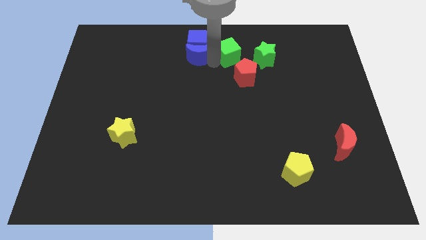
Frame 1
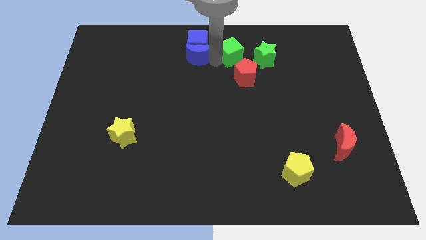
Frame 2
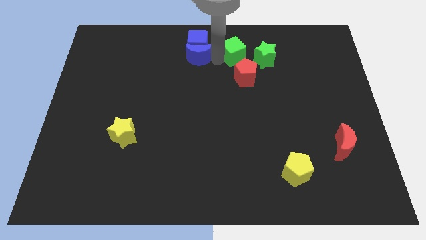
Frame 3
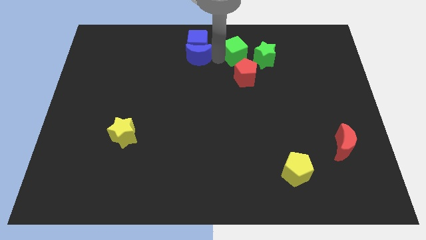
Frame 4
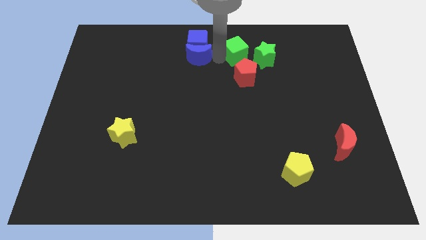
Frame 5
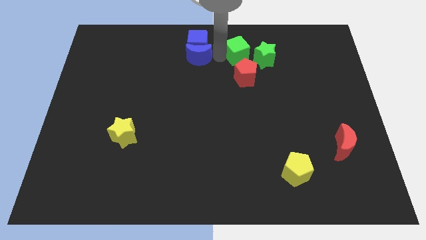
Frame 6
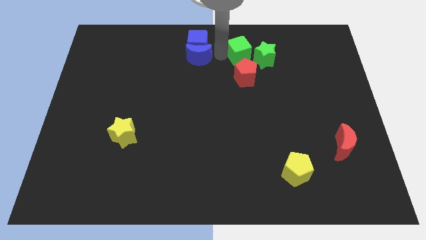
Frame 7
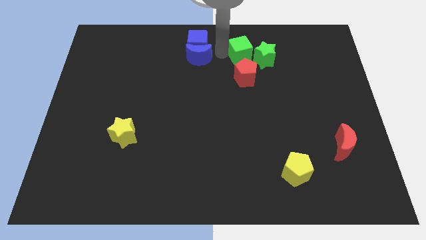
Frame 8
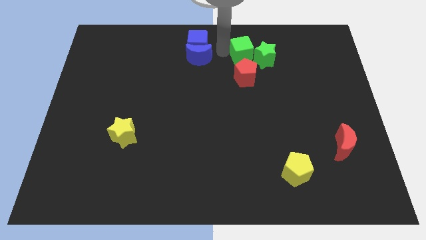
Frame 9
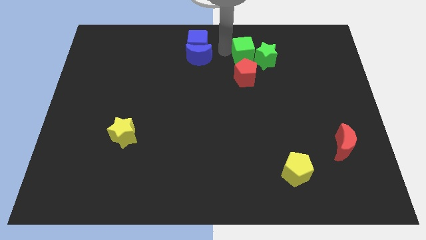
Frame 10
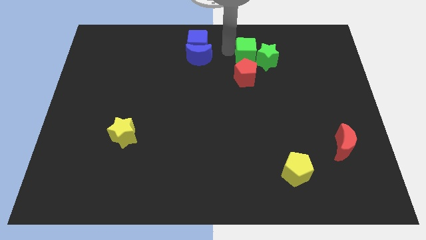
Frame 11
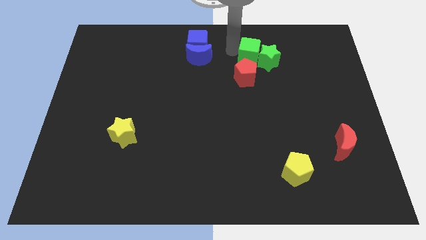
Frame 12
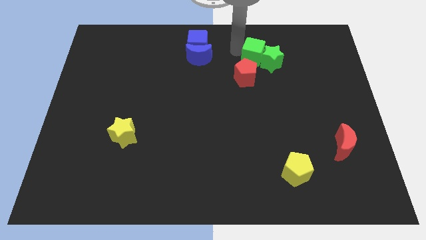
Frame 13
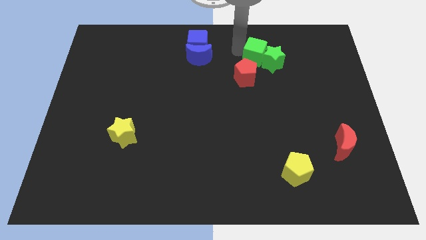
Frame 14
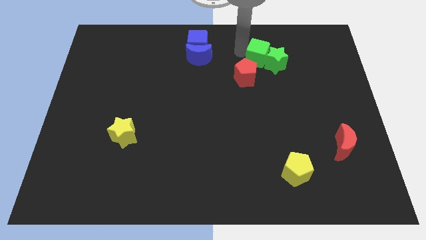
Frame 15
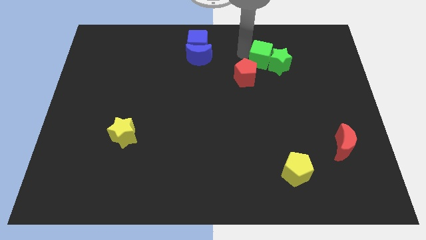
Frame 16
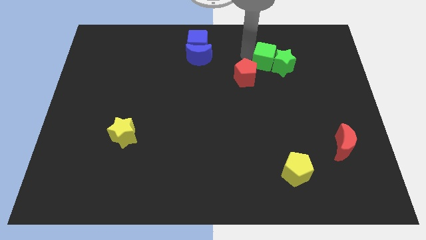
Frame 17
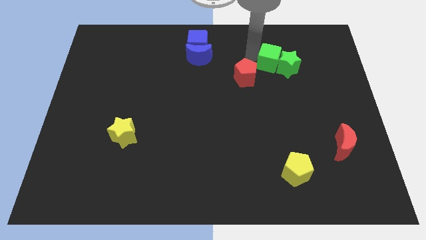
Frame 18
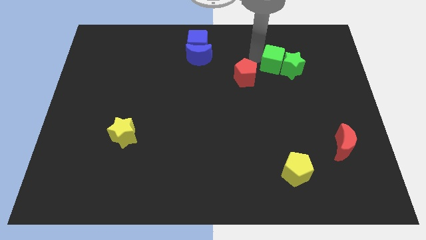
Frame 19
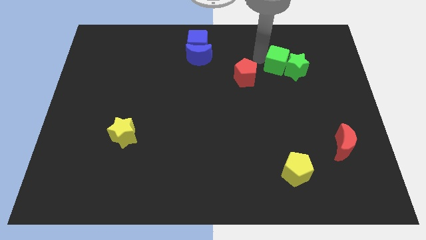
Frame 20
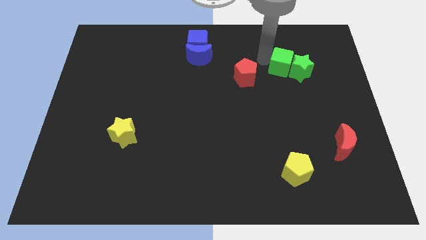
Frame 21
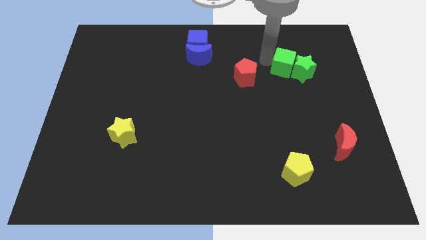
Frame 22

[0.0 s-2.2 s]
push the green cube into the green star

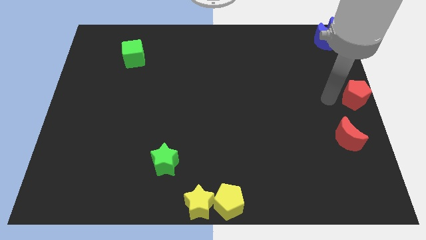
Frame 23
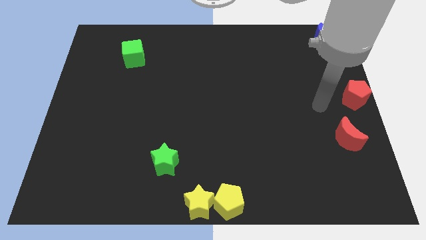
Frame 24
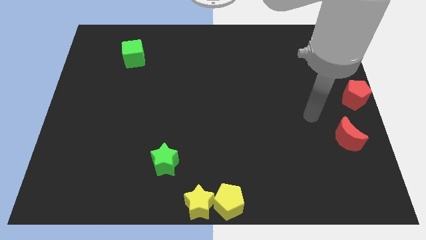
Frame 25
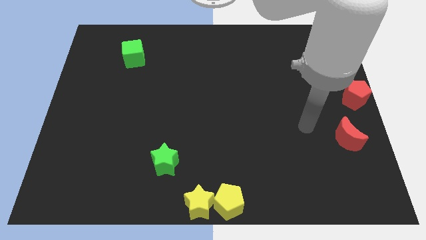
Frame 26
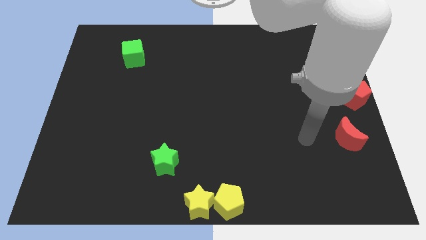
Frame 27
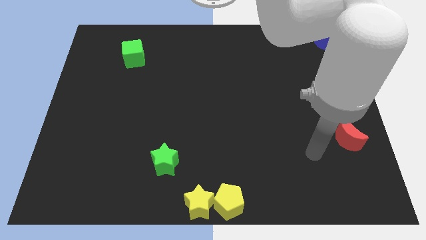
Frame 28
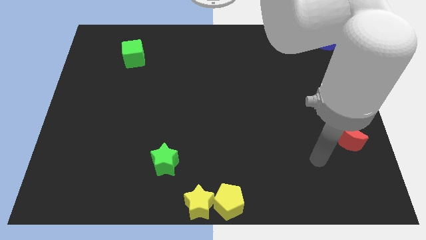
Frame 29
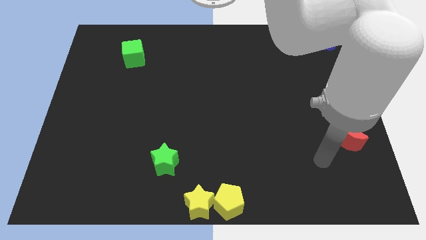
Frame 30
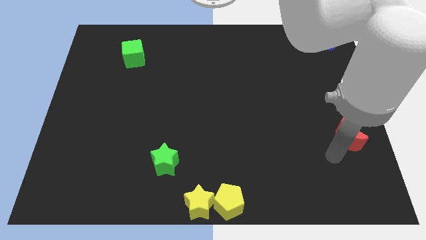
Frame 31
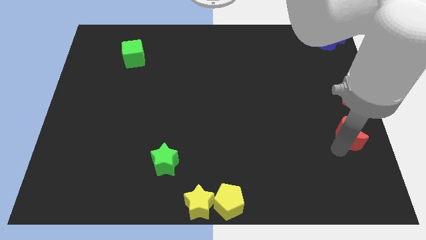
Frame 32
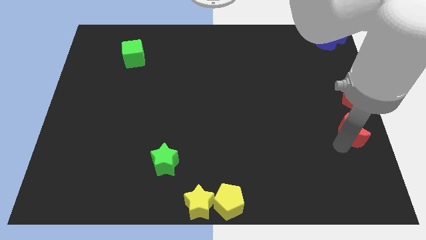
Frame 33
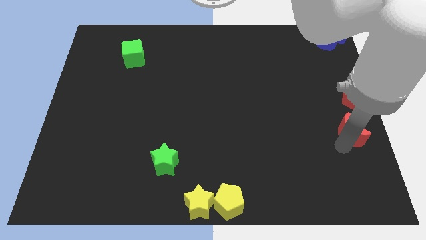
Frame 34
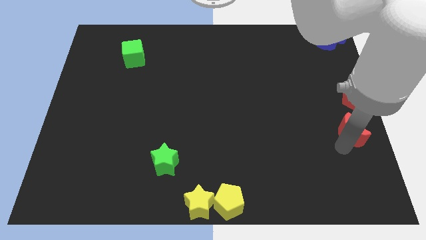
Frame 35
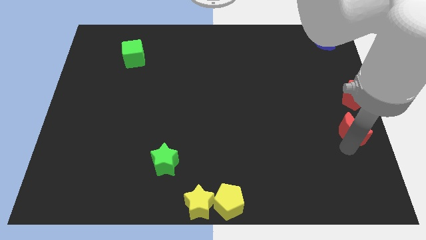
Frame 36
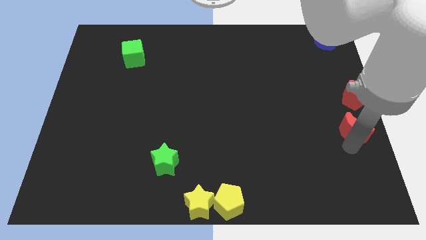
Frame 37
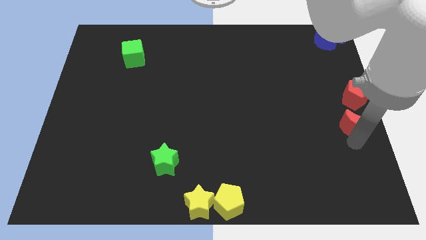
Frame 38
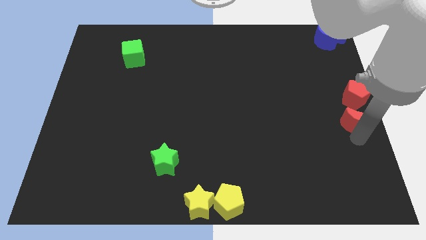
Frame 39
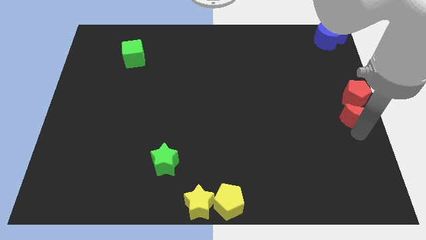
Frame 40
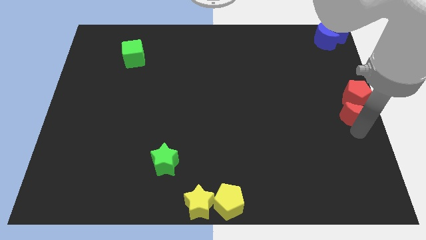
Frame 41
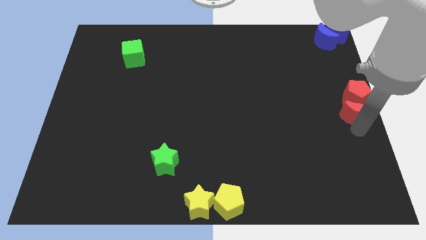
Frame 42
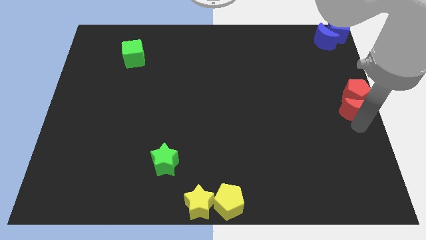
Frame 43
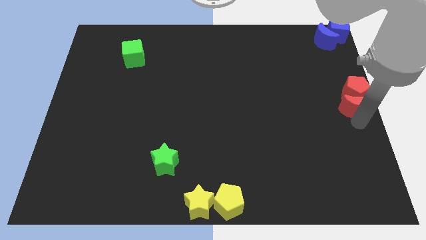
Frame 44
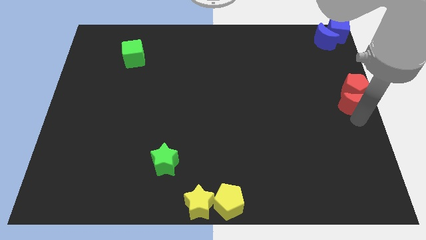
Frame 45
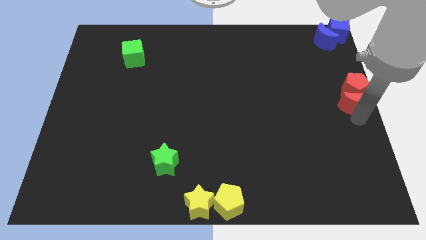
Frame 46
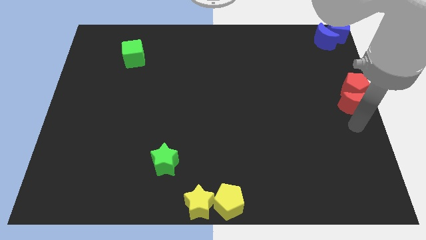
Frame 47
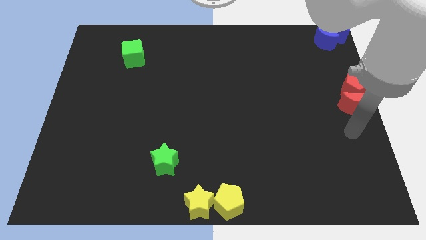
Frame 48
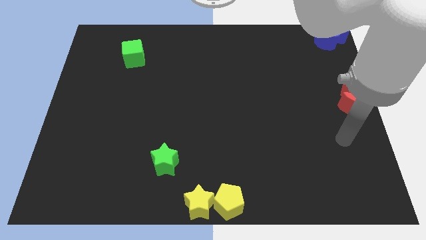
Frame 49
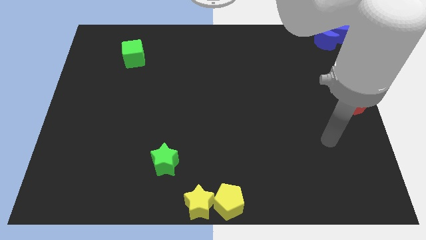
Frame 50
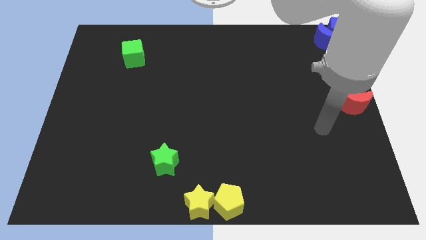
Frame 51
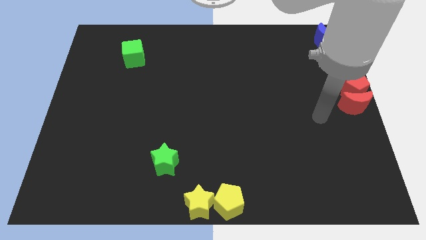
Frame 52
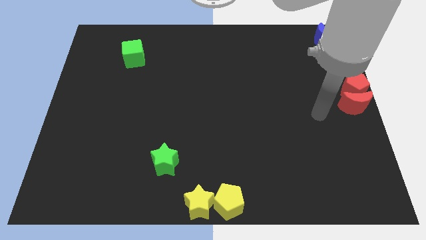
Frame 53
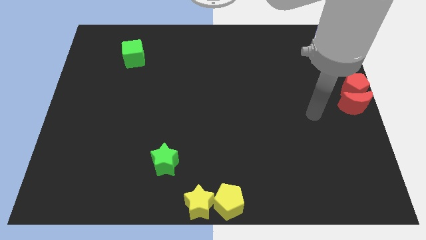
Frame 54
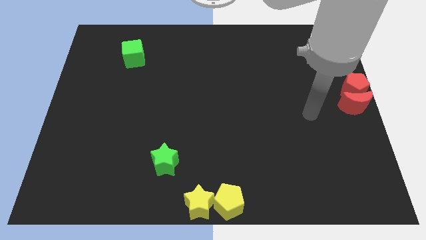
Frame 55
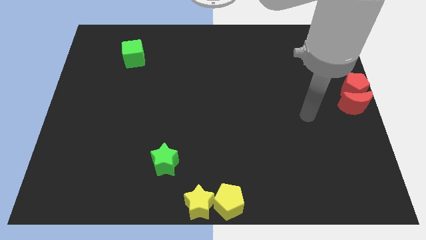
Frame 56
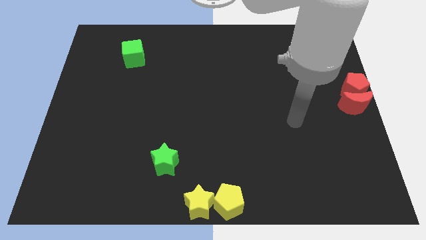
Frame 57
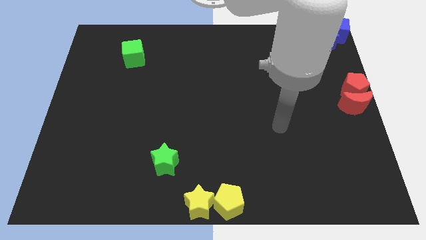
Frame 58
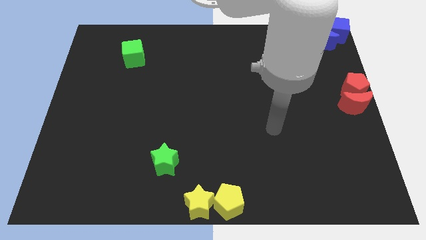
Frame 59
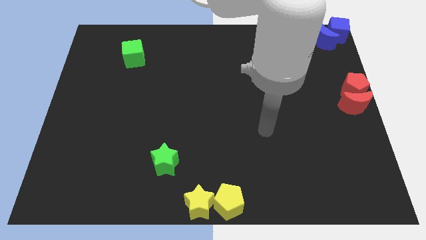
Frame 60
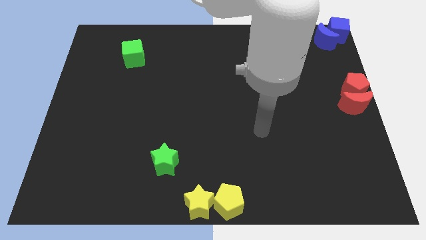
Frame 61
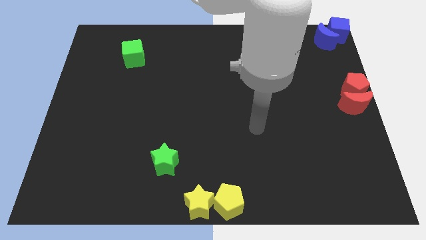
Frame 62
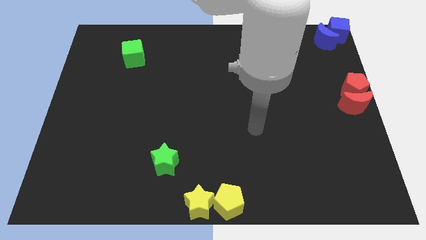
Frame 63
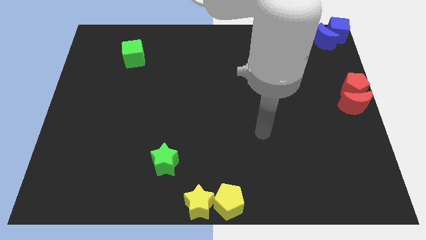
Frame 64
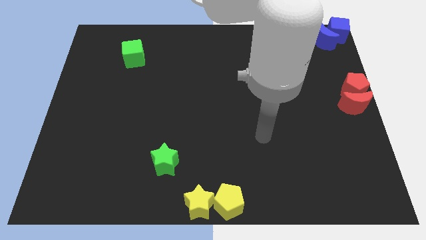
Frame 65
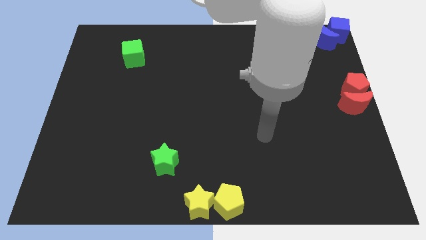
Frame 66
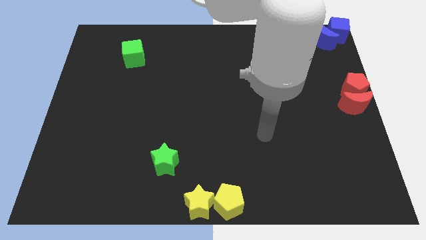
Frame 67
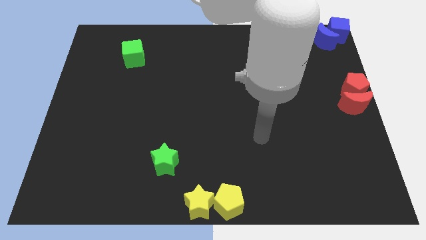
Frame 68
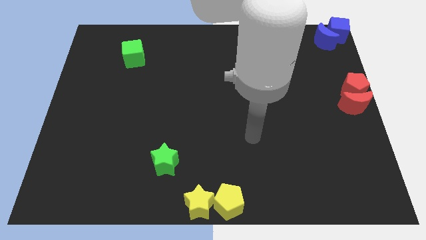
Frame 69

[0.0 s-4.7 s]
place the red crescent below the red pentagon

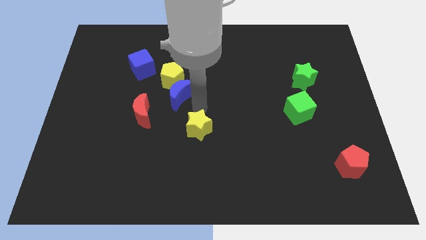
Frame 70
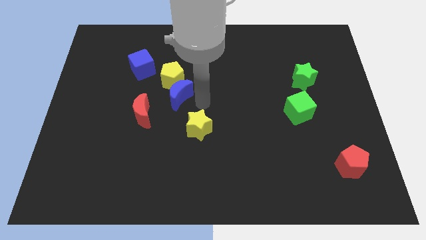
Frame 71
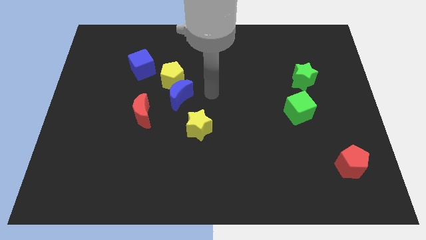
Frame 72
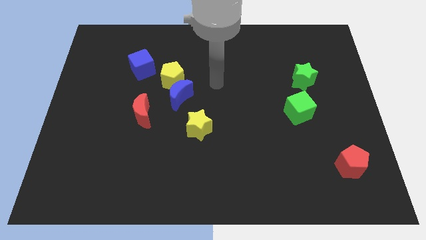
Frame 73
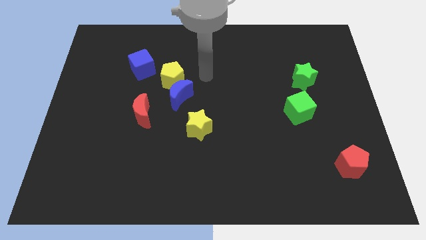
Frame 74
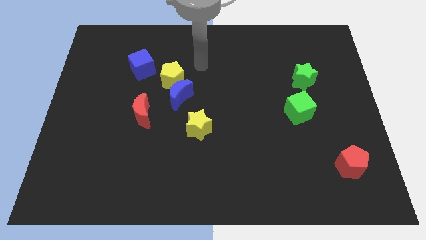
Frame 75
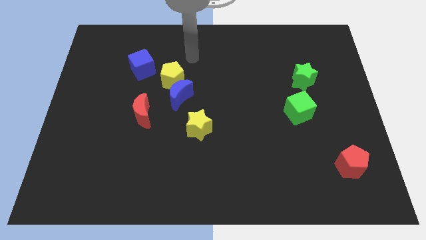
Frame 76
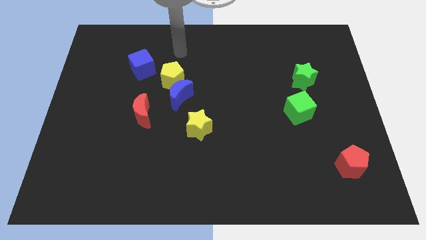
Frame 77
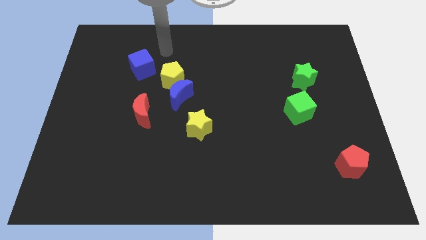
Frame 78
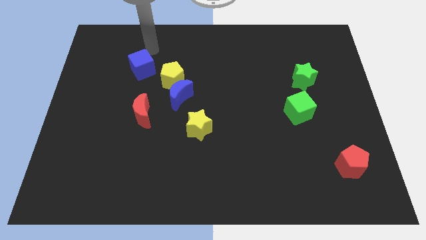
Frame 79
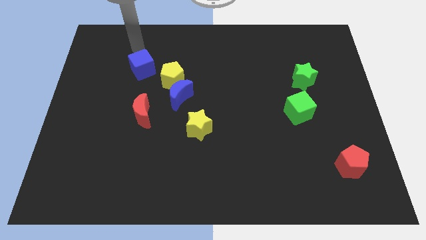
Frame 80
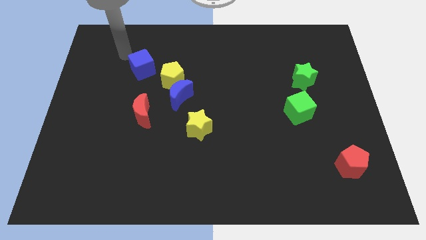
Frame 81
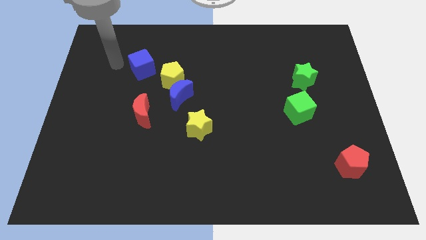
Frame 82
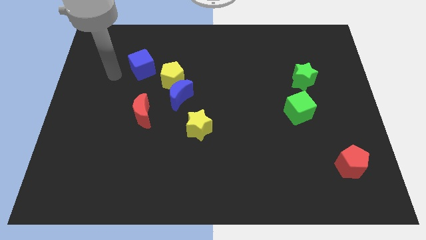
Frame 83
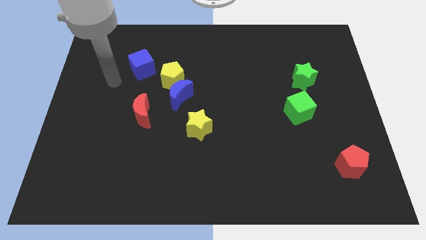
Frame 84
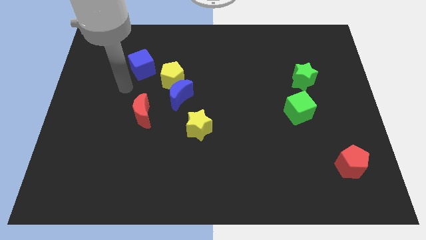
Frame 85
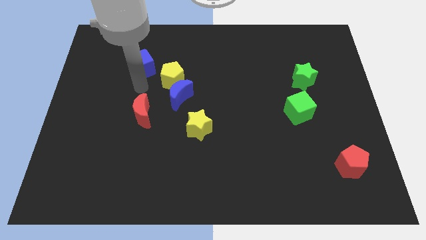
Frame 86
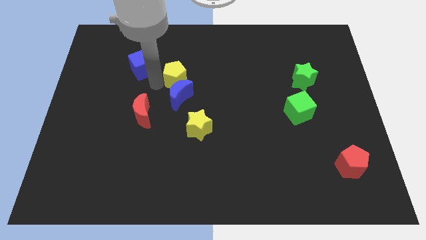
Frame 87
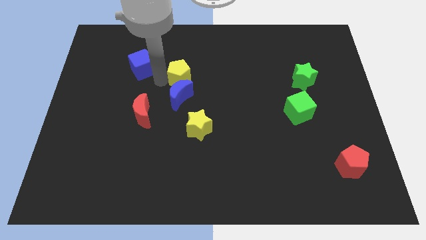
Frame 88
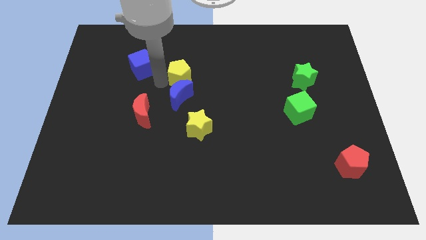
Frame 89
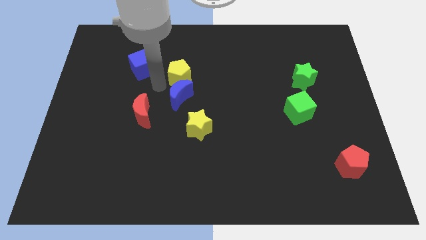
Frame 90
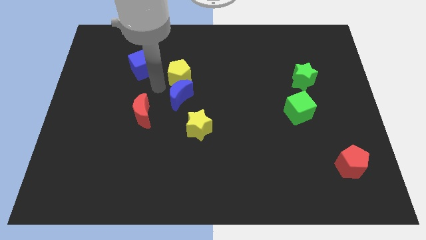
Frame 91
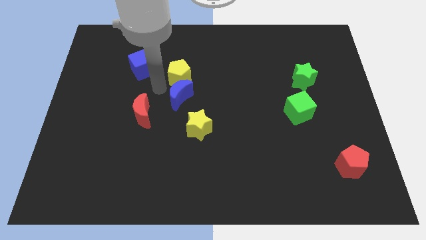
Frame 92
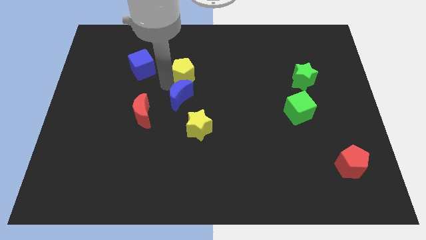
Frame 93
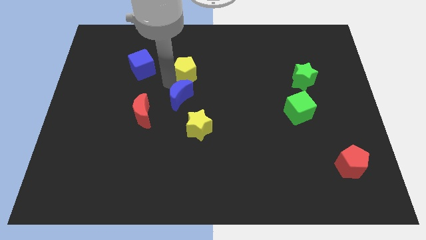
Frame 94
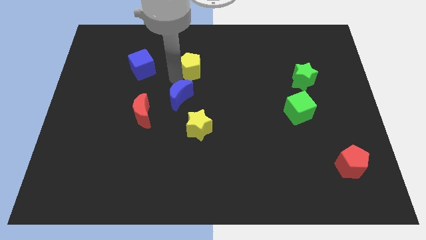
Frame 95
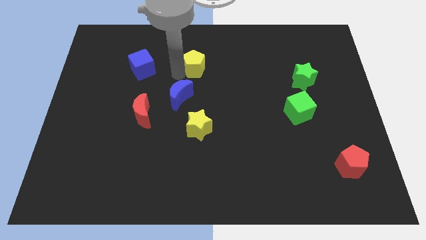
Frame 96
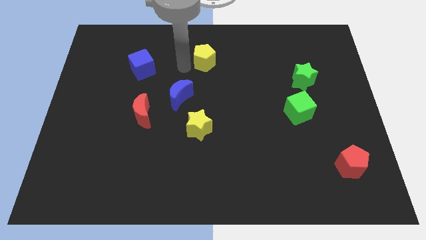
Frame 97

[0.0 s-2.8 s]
place the yellow pentagon to the right of the blue cube
